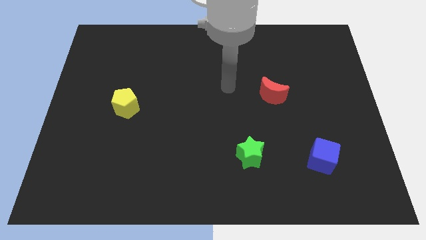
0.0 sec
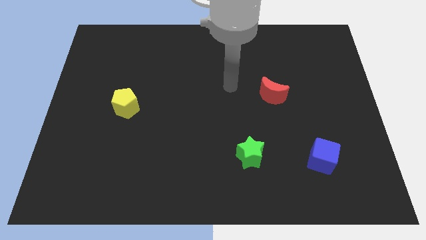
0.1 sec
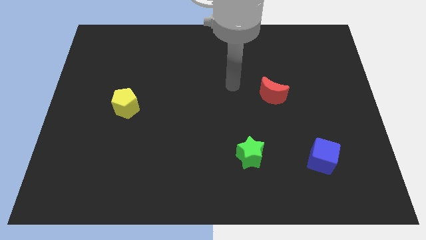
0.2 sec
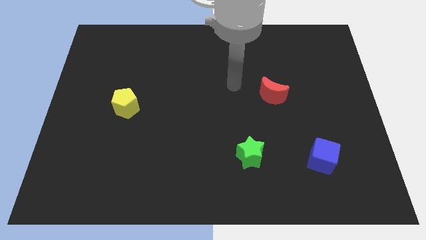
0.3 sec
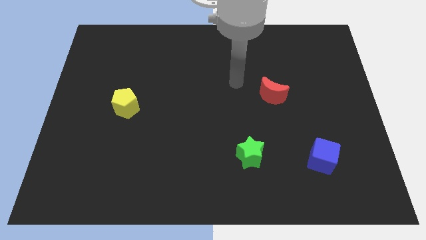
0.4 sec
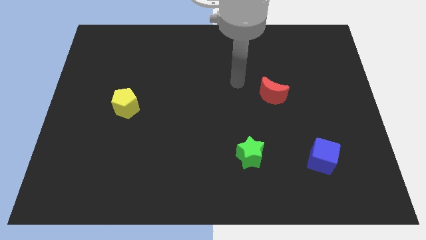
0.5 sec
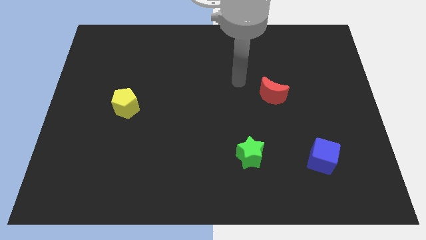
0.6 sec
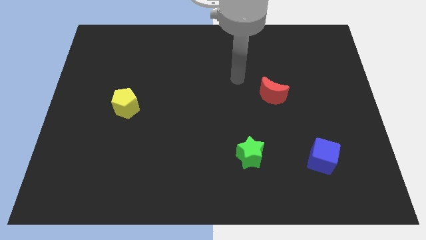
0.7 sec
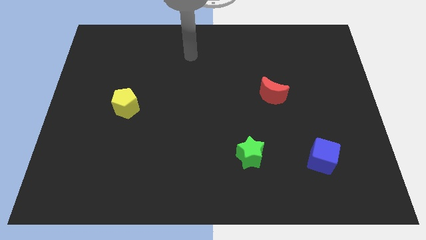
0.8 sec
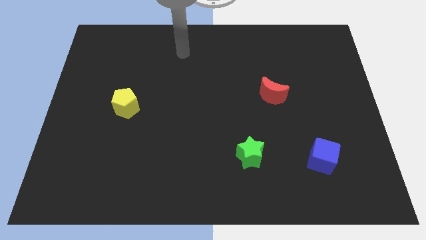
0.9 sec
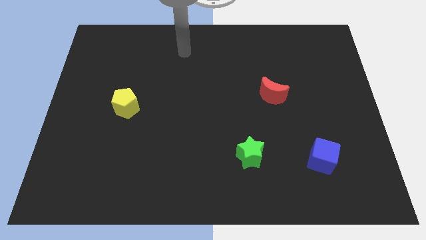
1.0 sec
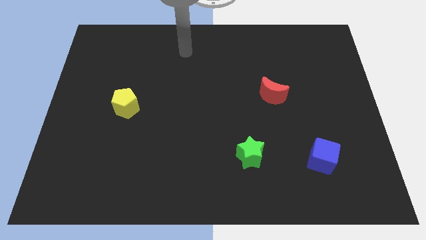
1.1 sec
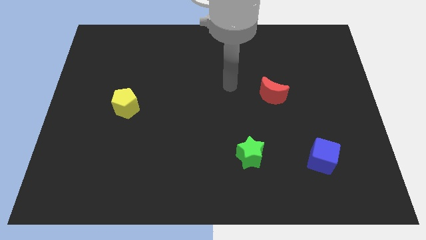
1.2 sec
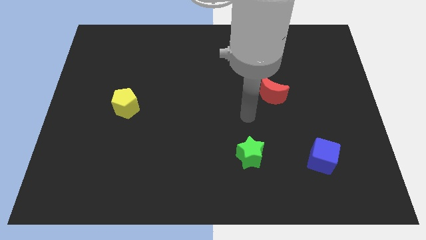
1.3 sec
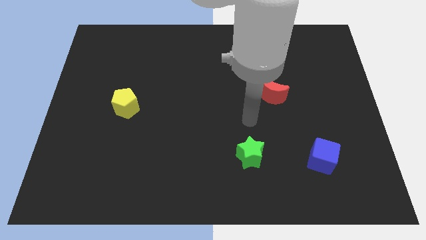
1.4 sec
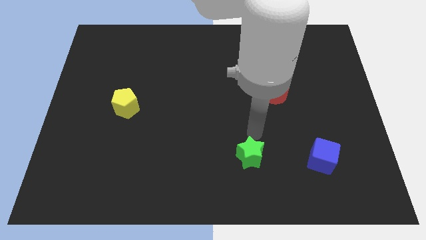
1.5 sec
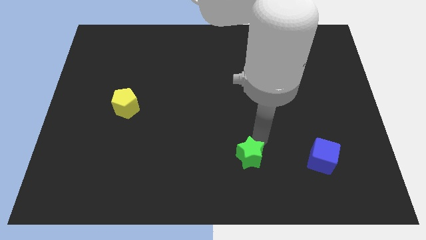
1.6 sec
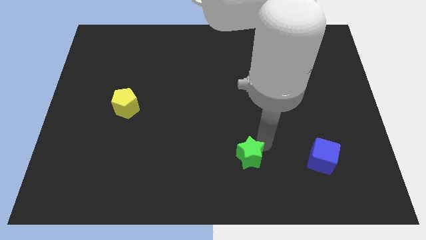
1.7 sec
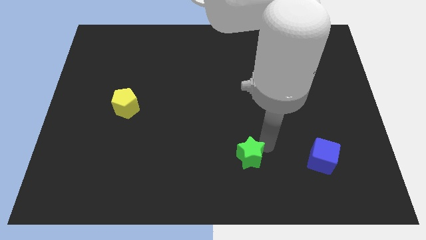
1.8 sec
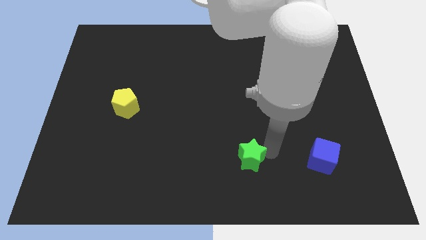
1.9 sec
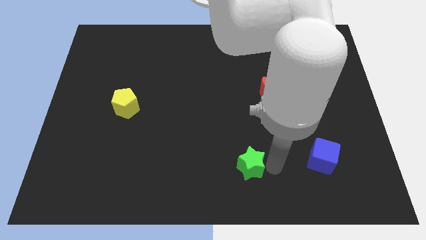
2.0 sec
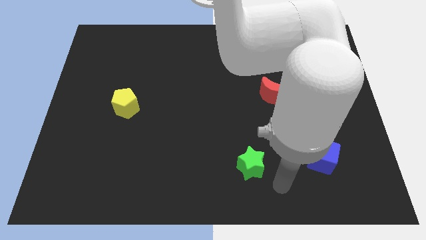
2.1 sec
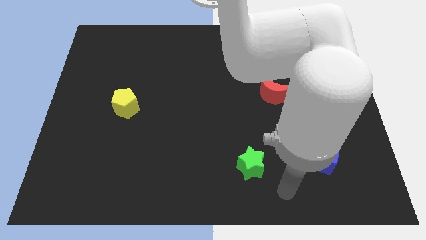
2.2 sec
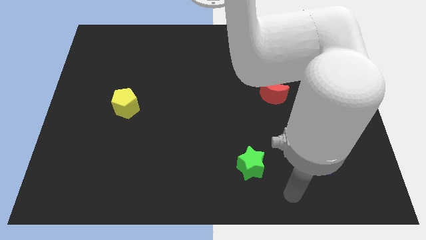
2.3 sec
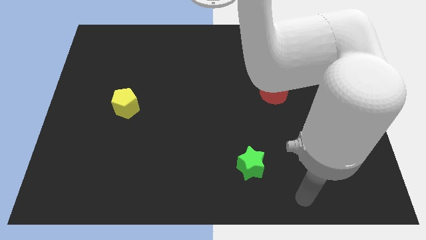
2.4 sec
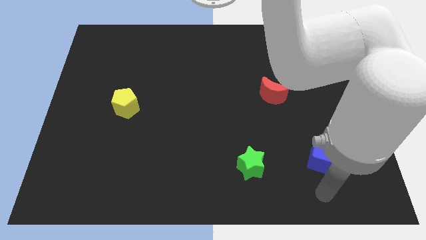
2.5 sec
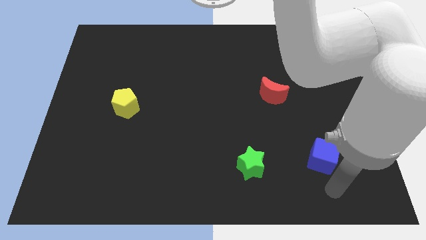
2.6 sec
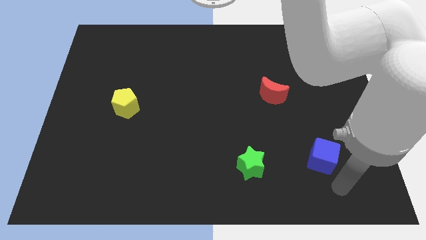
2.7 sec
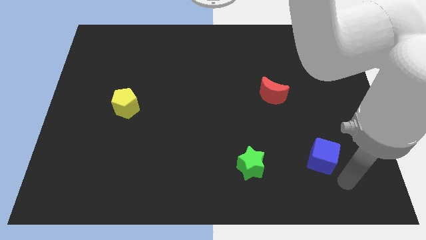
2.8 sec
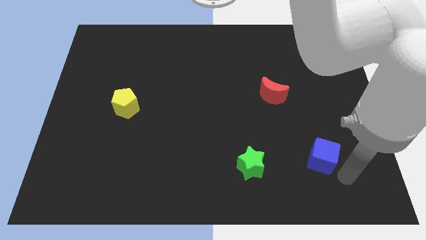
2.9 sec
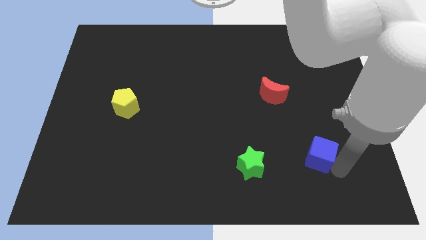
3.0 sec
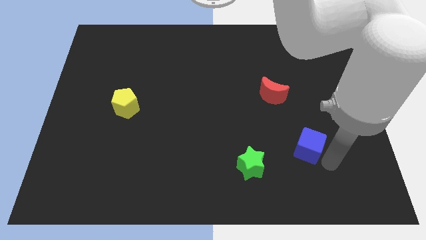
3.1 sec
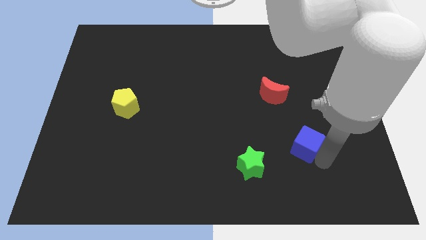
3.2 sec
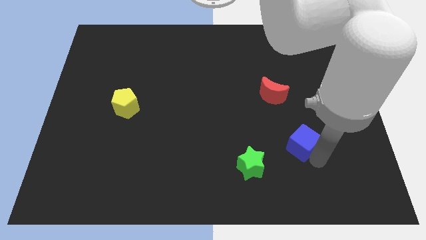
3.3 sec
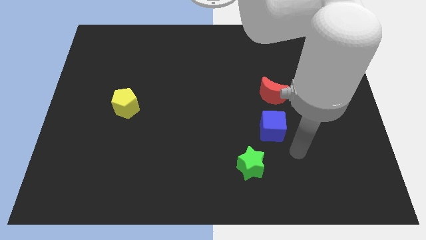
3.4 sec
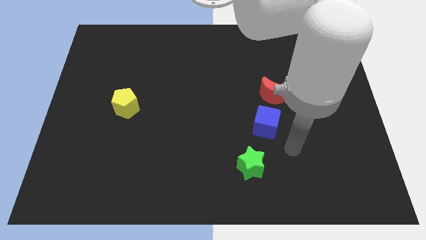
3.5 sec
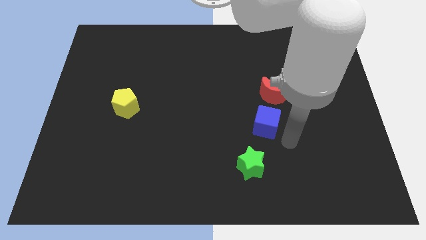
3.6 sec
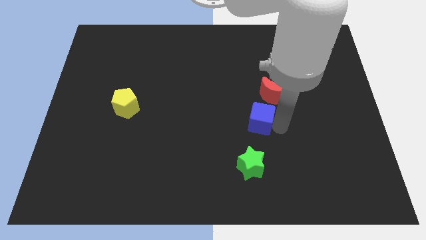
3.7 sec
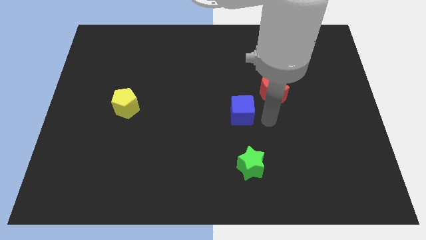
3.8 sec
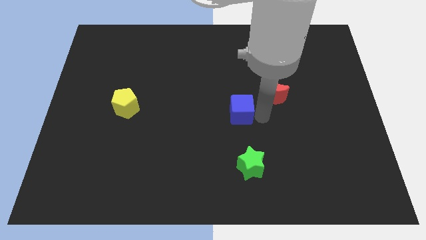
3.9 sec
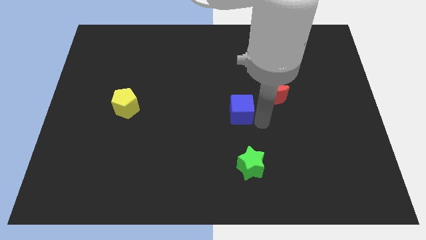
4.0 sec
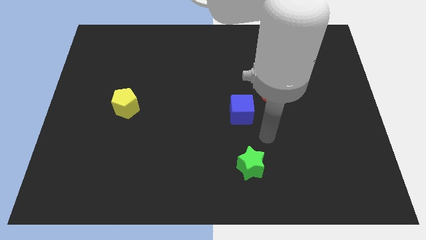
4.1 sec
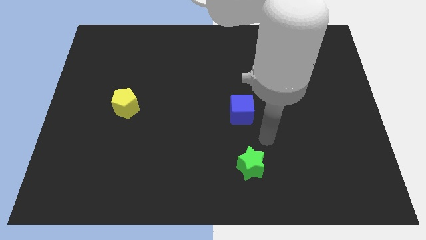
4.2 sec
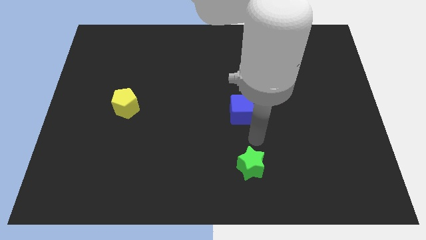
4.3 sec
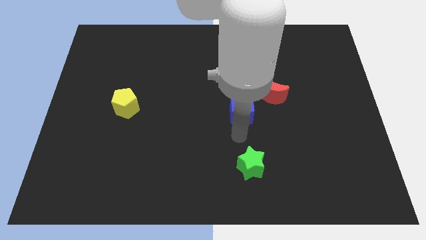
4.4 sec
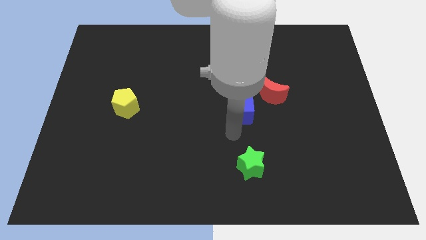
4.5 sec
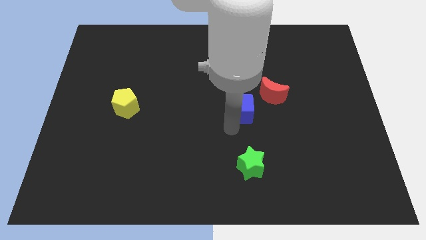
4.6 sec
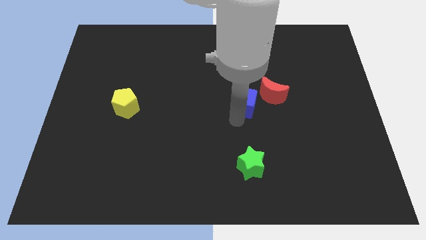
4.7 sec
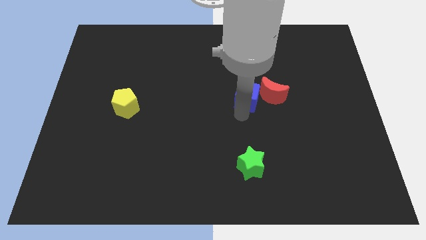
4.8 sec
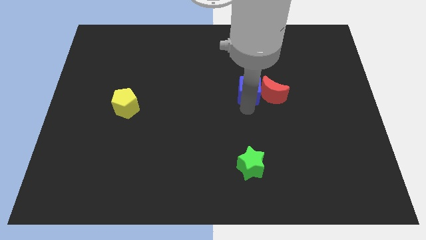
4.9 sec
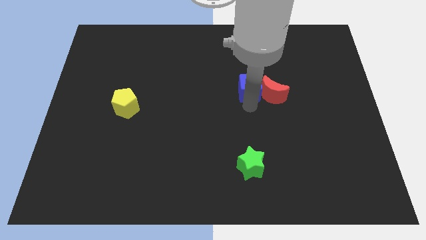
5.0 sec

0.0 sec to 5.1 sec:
push the blue cube towards the moon

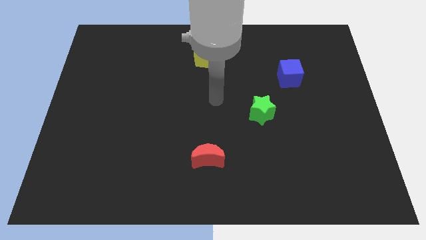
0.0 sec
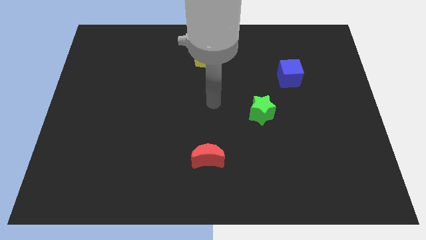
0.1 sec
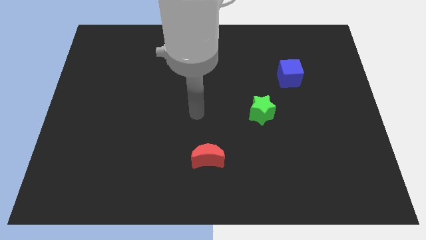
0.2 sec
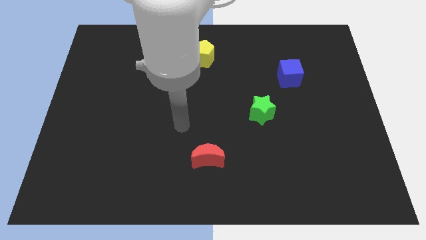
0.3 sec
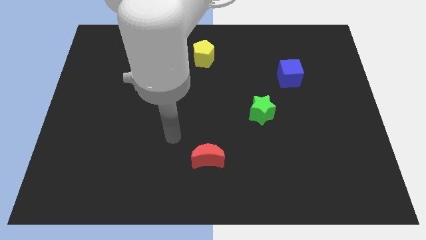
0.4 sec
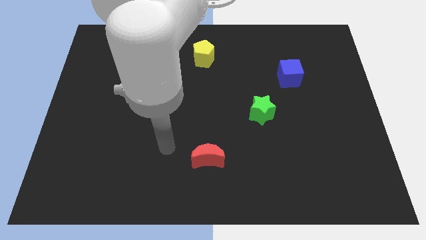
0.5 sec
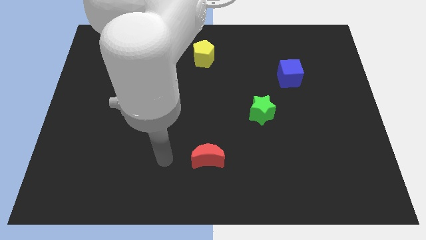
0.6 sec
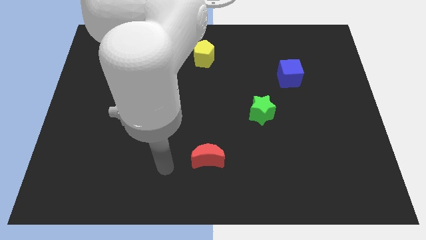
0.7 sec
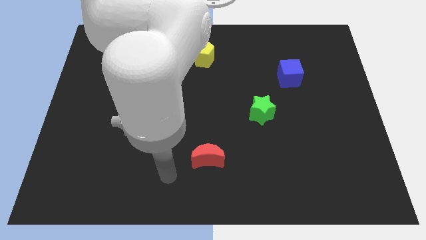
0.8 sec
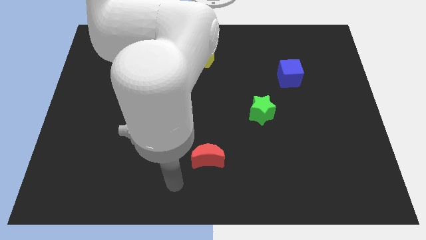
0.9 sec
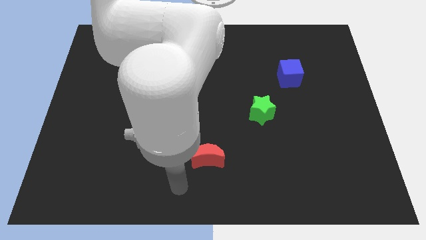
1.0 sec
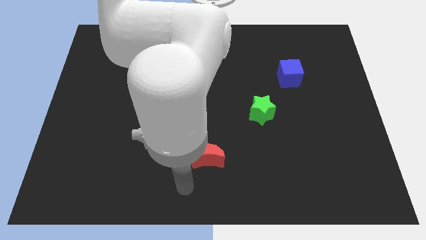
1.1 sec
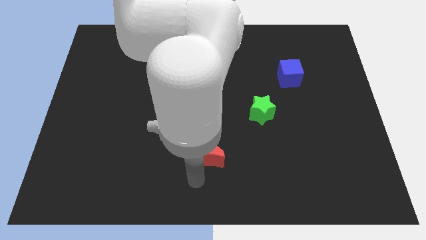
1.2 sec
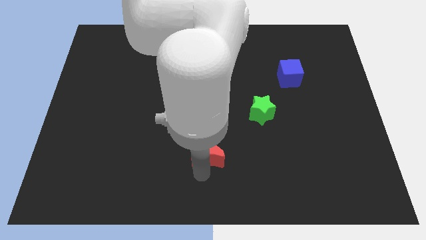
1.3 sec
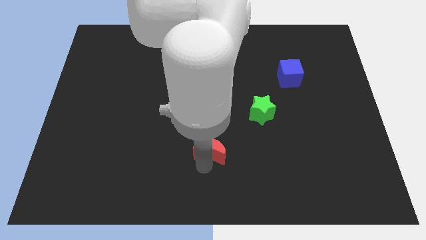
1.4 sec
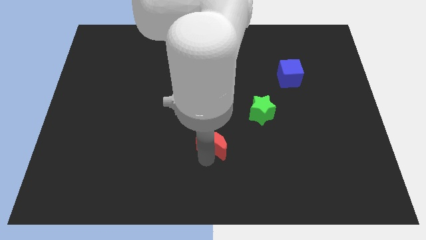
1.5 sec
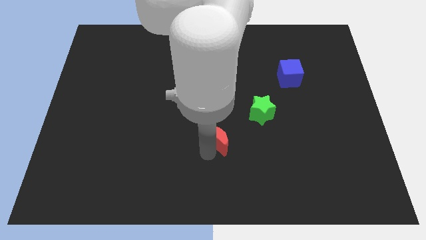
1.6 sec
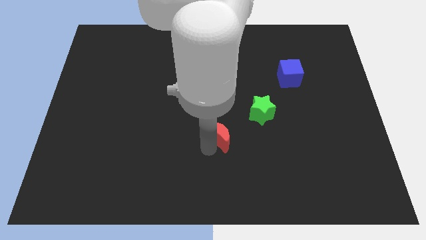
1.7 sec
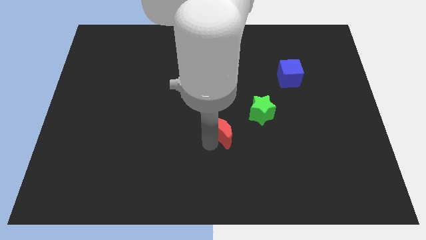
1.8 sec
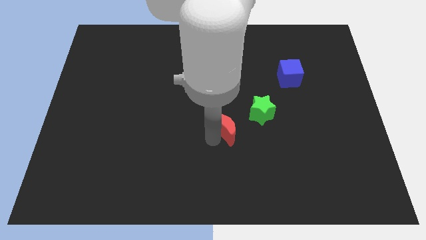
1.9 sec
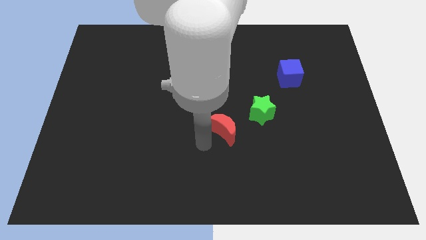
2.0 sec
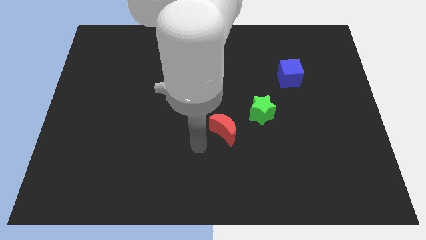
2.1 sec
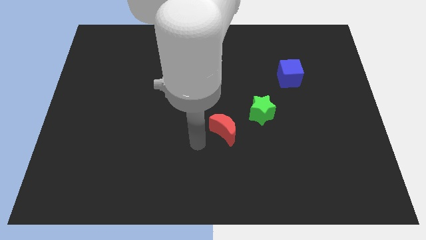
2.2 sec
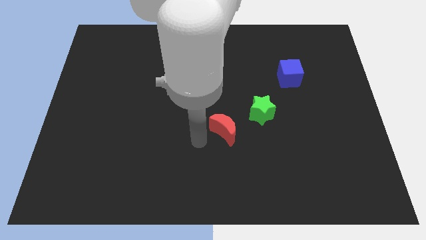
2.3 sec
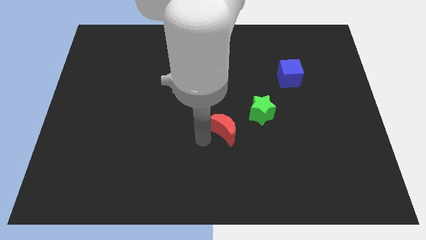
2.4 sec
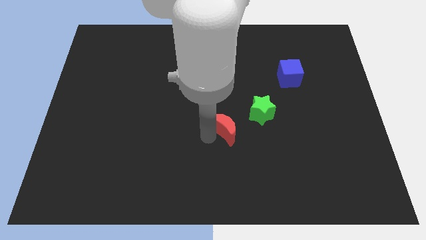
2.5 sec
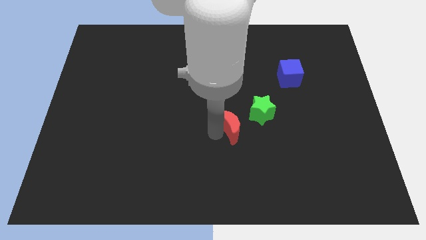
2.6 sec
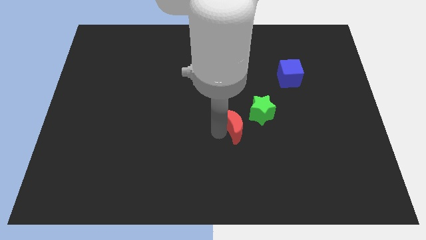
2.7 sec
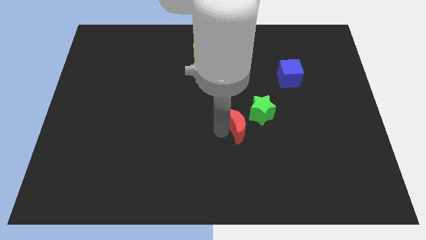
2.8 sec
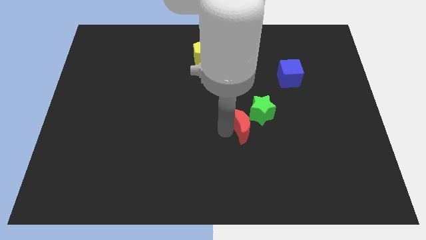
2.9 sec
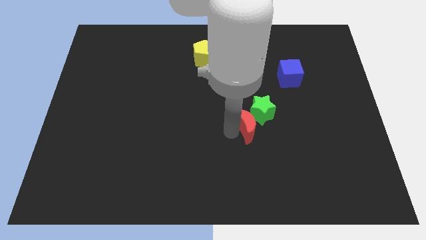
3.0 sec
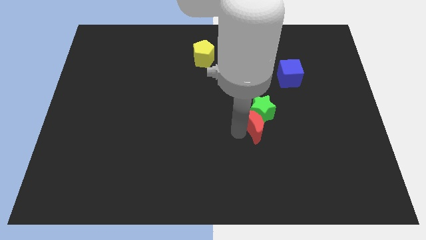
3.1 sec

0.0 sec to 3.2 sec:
move the red moon to the green block

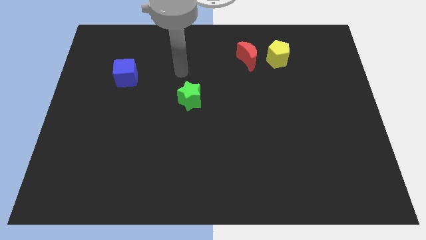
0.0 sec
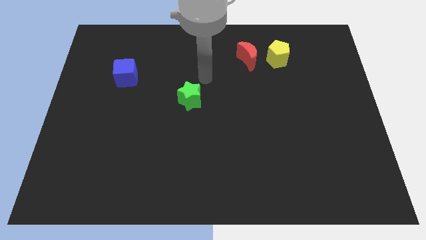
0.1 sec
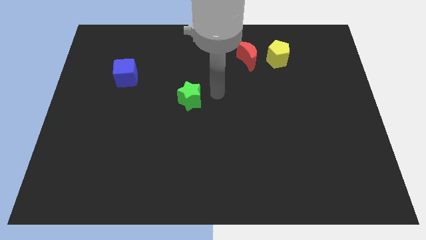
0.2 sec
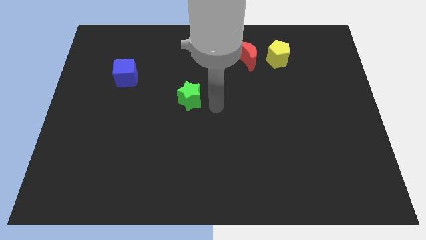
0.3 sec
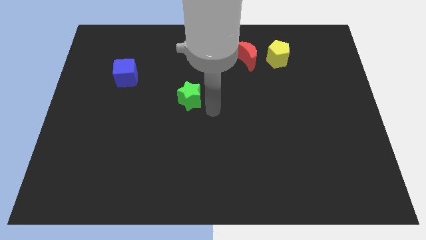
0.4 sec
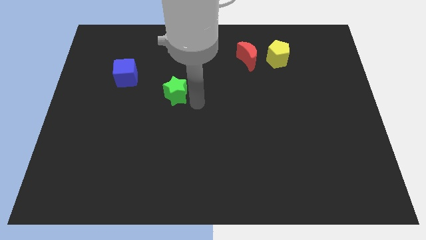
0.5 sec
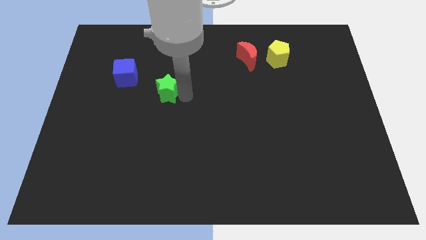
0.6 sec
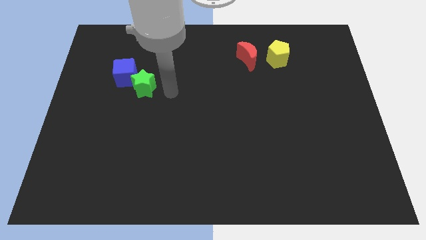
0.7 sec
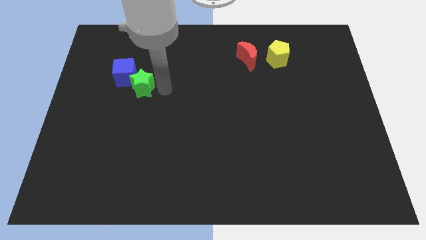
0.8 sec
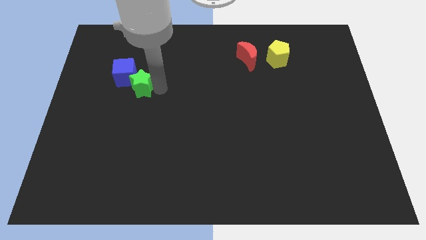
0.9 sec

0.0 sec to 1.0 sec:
slide the green star next to the blue block
